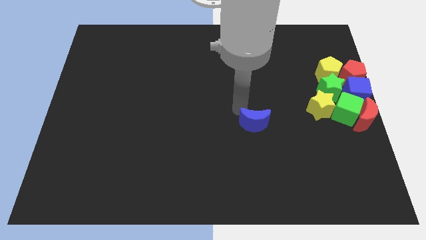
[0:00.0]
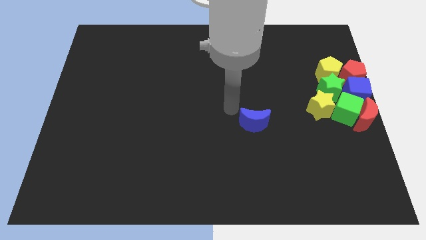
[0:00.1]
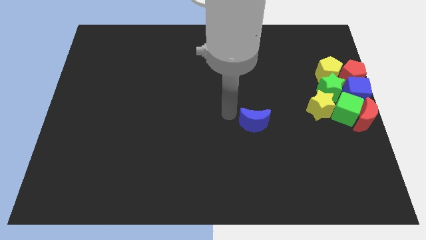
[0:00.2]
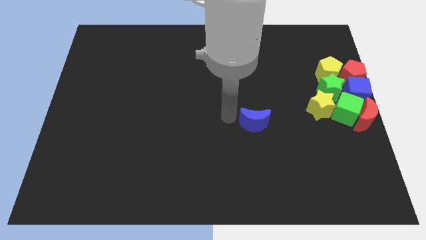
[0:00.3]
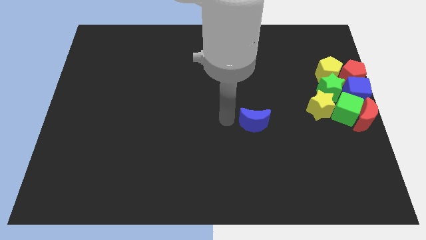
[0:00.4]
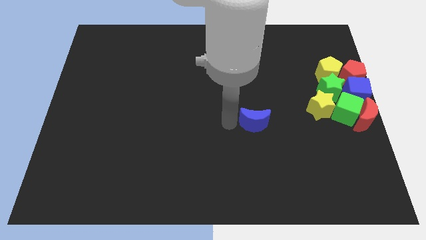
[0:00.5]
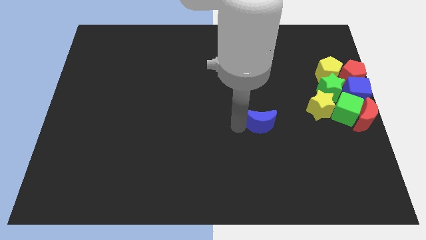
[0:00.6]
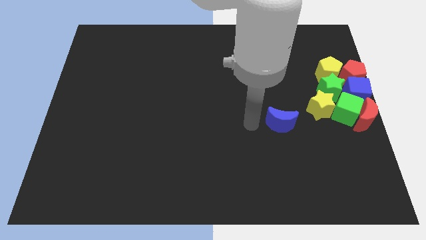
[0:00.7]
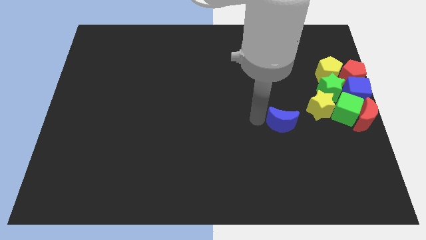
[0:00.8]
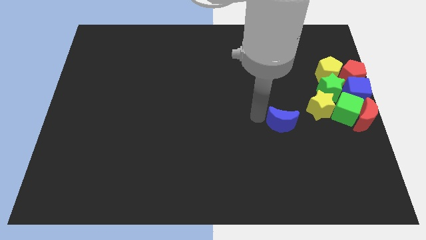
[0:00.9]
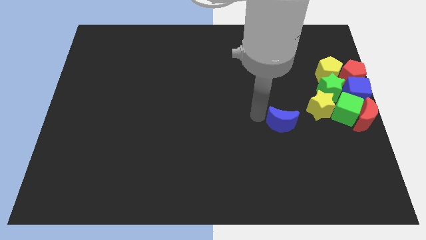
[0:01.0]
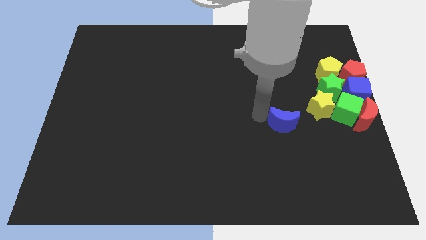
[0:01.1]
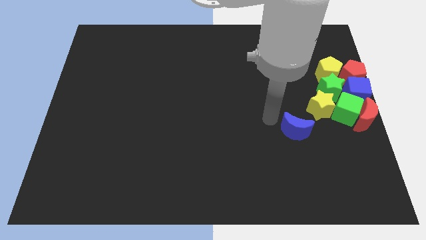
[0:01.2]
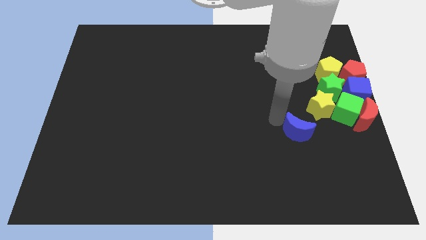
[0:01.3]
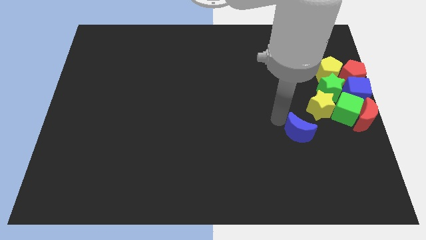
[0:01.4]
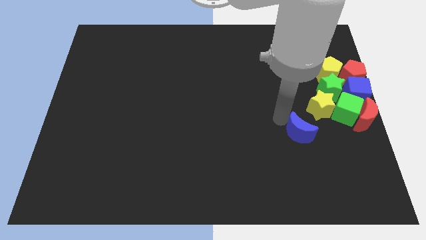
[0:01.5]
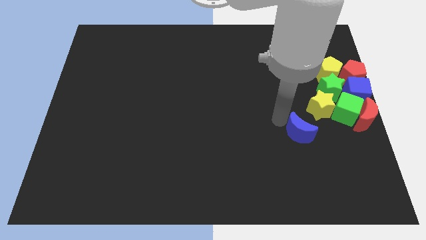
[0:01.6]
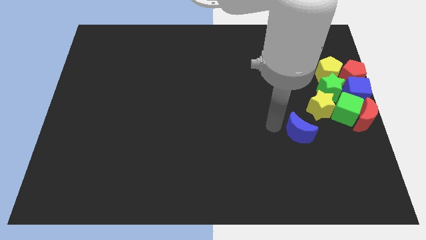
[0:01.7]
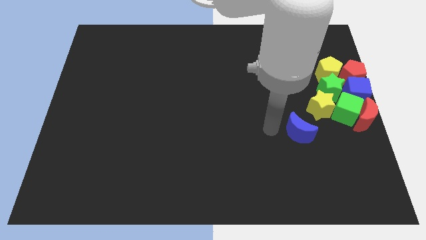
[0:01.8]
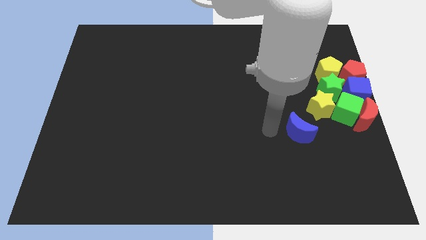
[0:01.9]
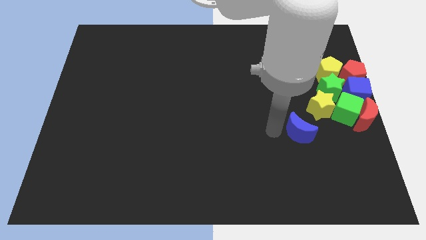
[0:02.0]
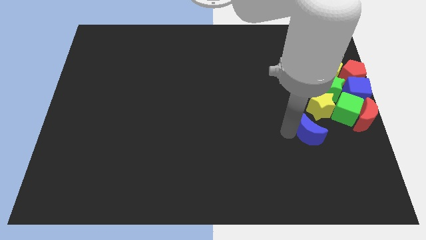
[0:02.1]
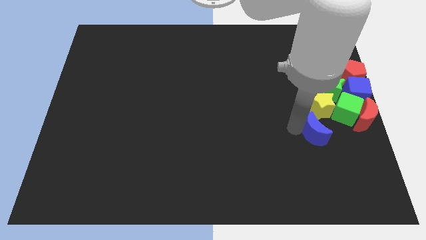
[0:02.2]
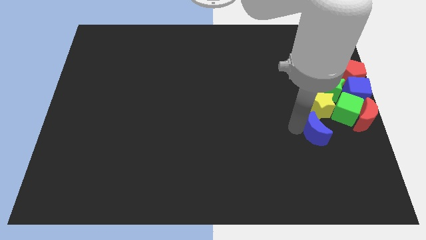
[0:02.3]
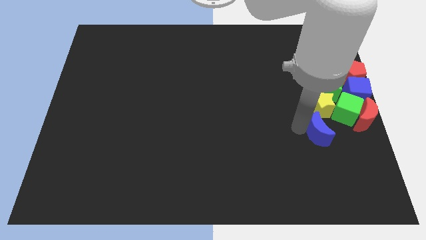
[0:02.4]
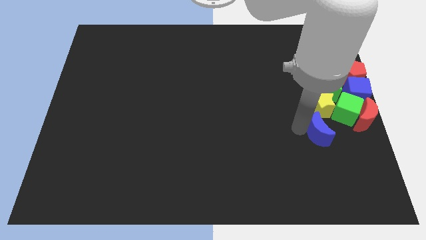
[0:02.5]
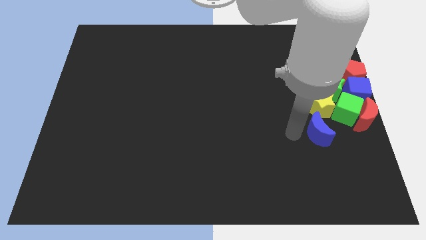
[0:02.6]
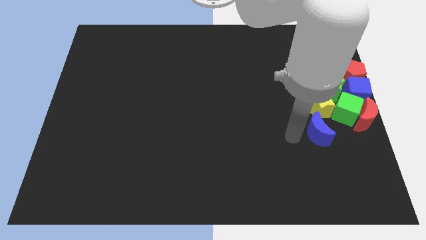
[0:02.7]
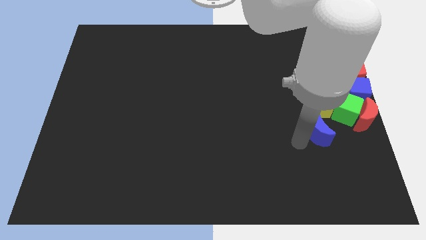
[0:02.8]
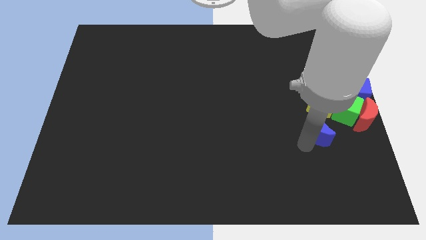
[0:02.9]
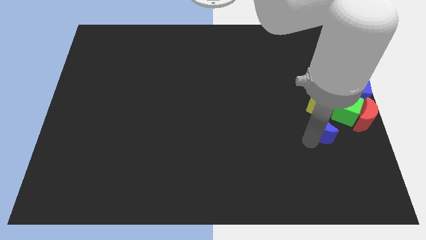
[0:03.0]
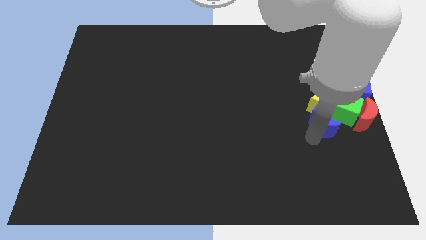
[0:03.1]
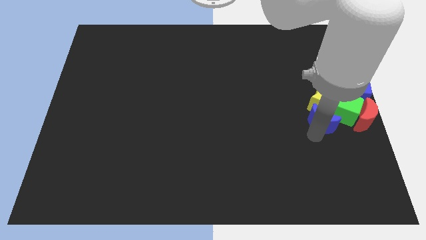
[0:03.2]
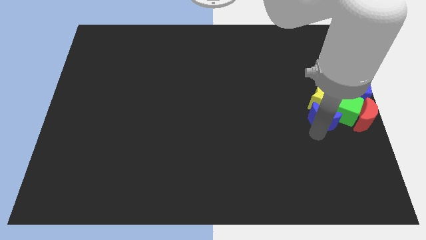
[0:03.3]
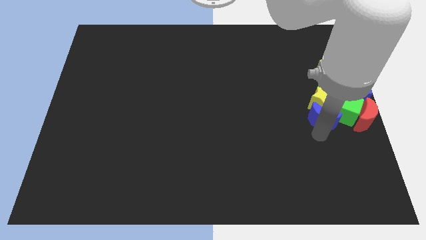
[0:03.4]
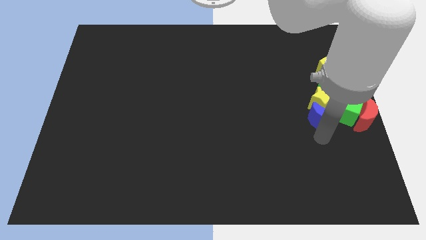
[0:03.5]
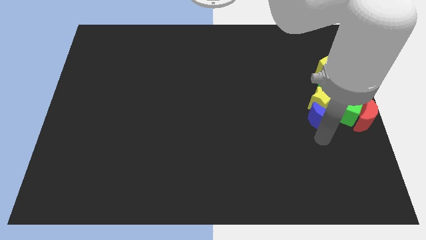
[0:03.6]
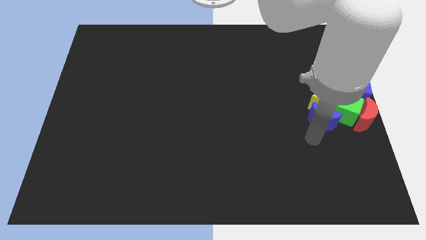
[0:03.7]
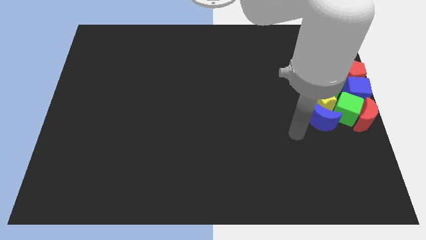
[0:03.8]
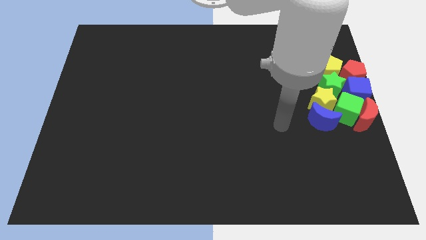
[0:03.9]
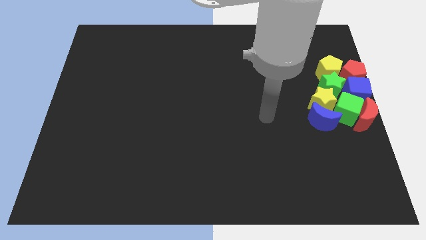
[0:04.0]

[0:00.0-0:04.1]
place the blue crescent to the bottom of the yellow star

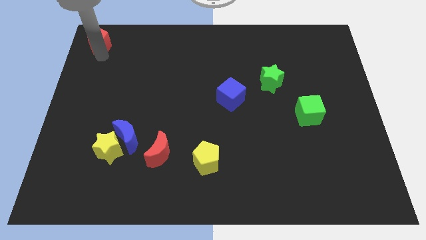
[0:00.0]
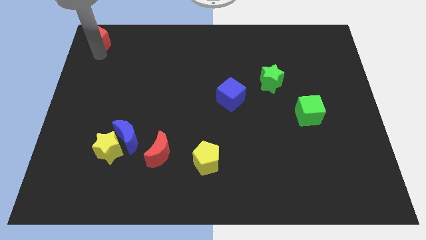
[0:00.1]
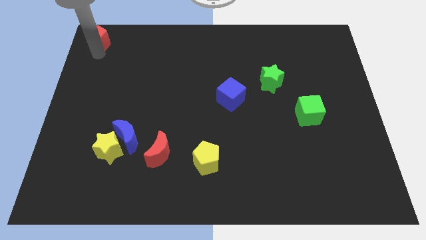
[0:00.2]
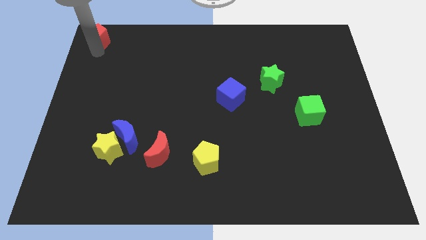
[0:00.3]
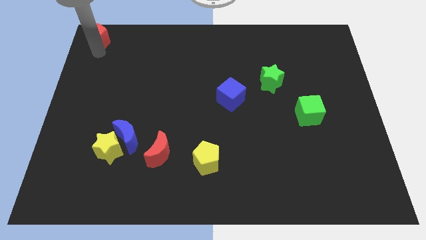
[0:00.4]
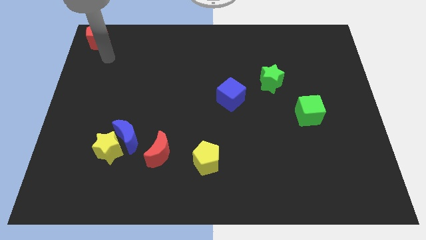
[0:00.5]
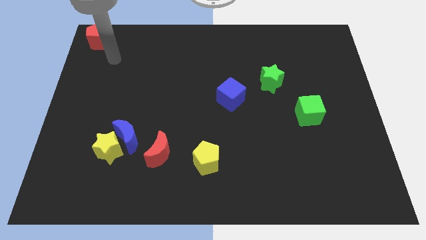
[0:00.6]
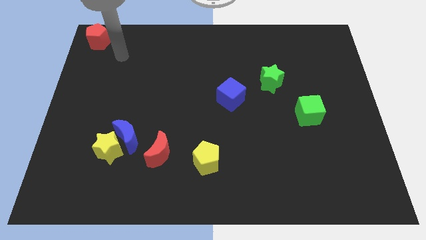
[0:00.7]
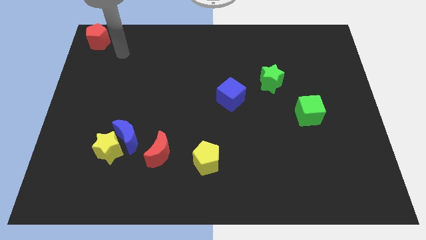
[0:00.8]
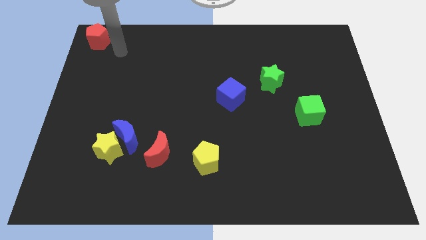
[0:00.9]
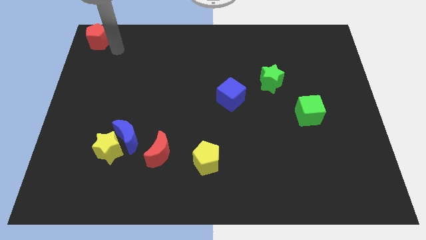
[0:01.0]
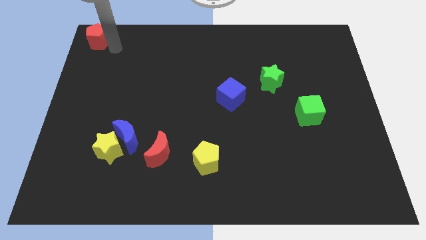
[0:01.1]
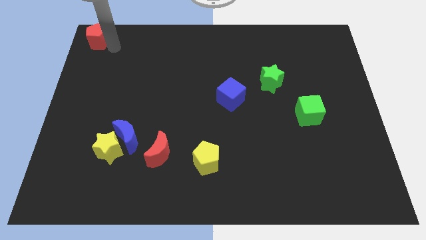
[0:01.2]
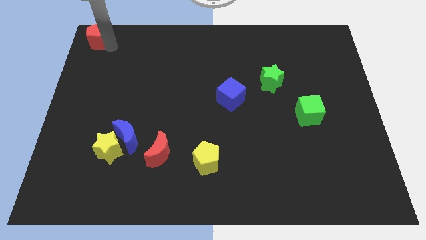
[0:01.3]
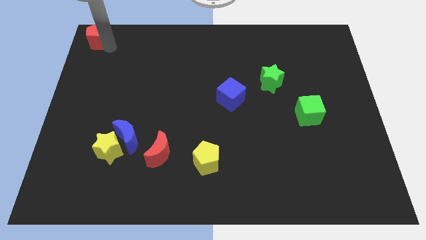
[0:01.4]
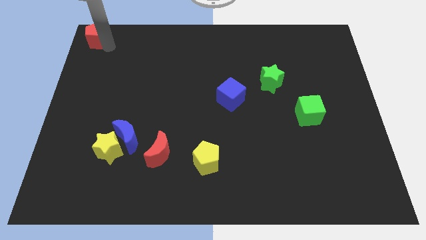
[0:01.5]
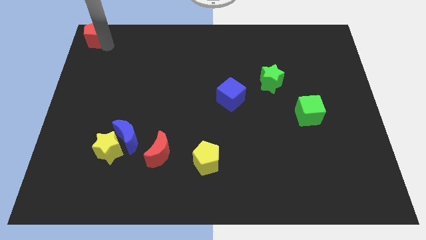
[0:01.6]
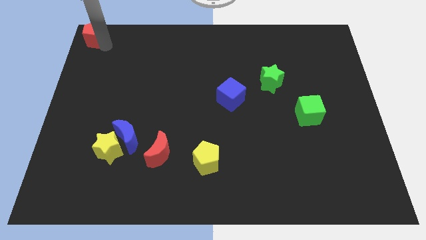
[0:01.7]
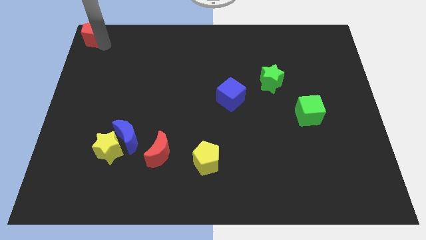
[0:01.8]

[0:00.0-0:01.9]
move the red pentagon to the top left corner

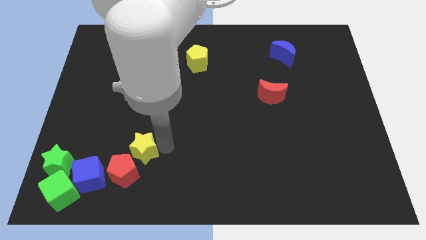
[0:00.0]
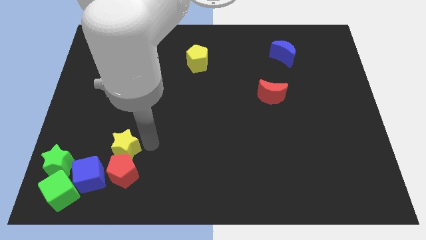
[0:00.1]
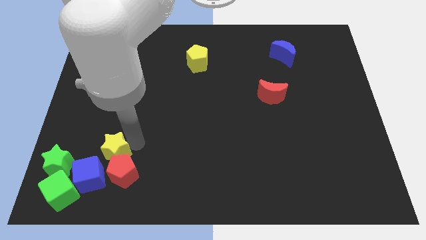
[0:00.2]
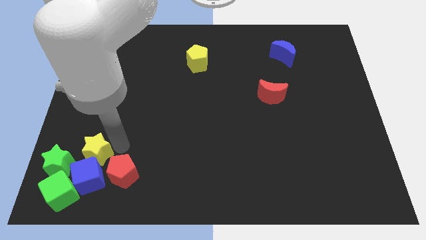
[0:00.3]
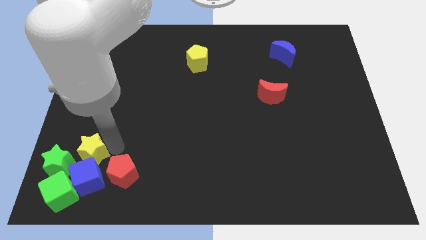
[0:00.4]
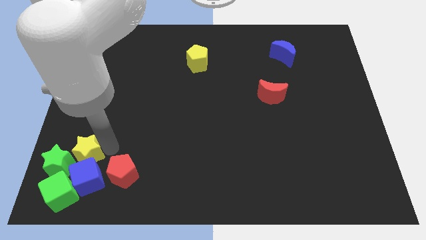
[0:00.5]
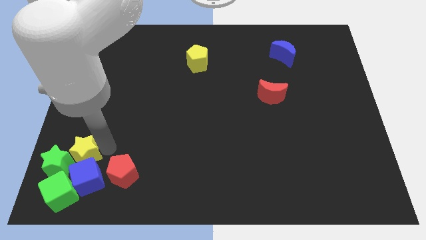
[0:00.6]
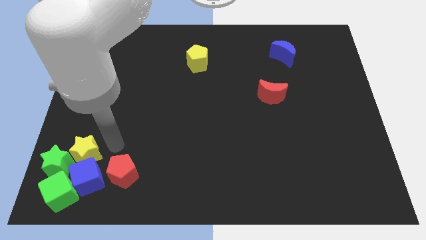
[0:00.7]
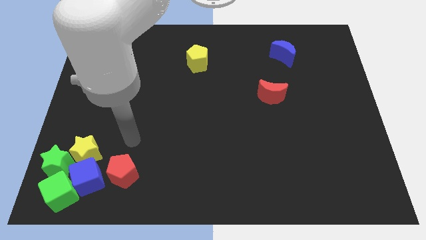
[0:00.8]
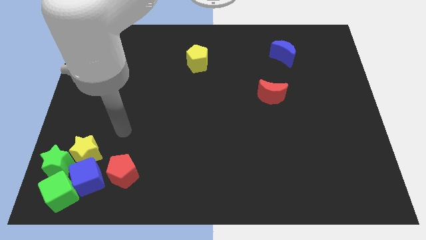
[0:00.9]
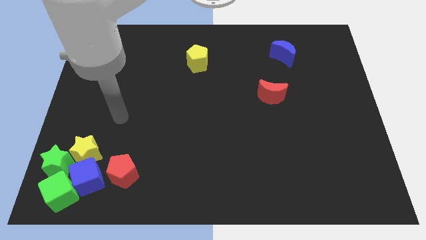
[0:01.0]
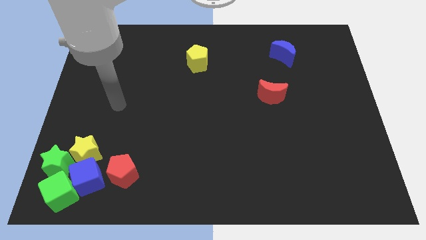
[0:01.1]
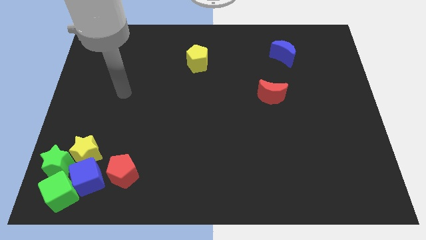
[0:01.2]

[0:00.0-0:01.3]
move the yellow star into the green star

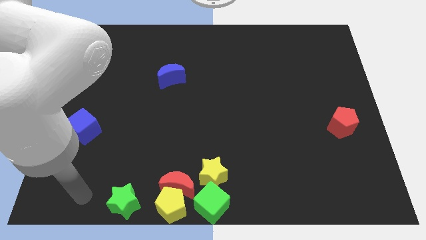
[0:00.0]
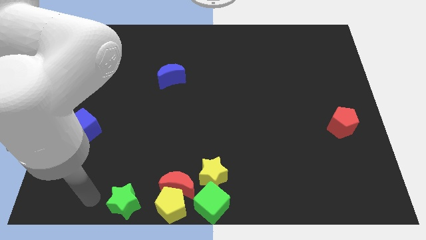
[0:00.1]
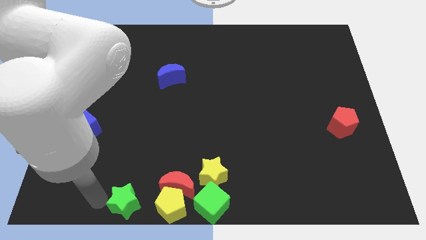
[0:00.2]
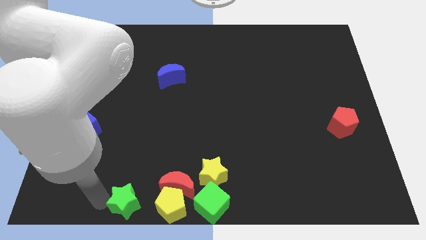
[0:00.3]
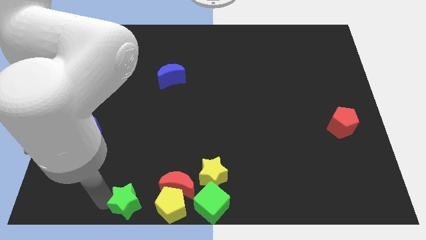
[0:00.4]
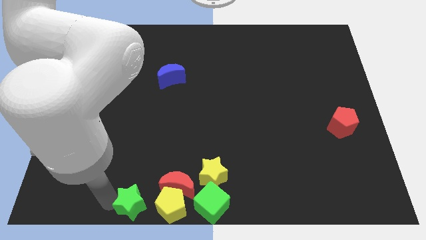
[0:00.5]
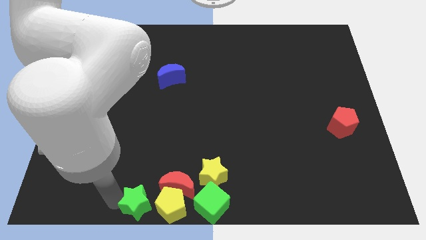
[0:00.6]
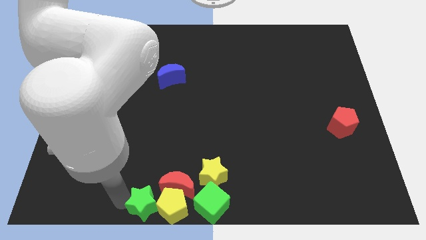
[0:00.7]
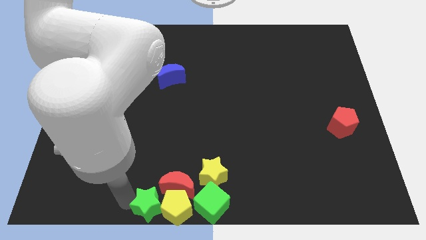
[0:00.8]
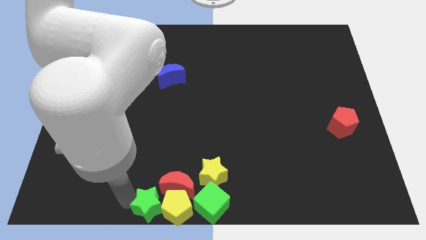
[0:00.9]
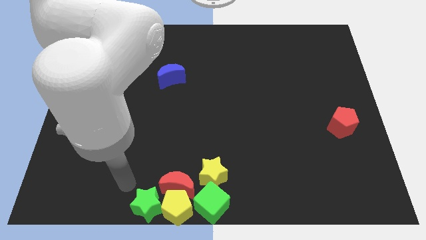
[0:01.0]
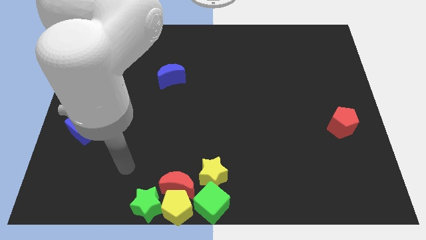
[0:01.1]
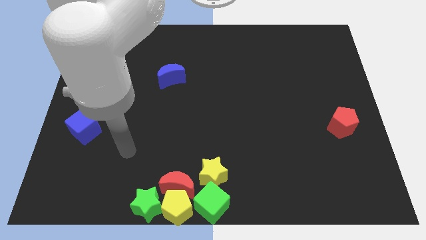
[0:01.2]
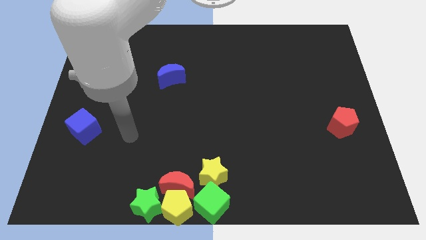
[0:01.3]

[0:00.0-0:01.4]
move the green star to the left side of the yellow pentagon

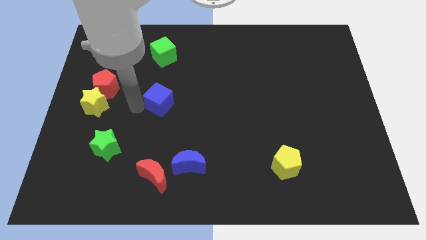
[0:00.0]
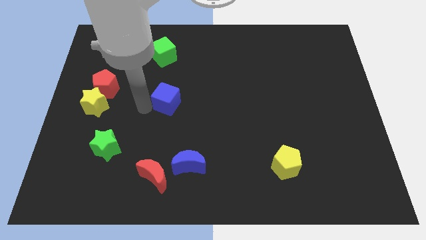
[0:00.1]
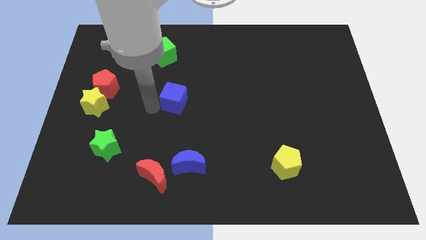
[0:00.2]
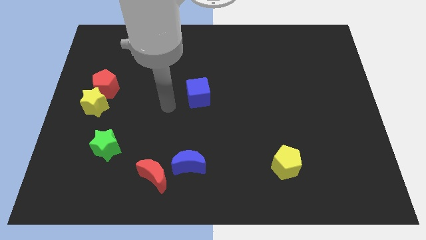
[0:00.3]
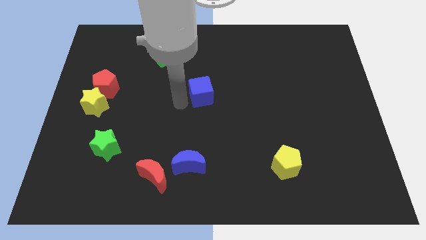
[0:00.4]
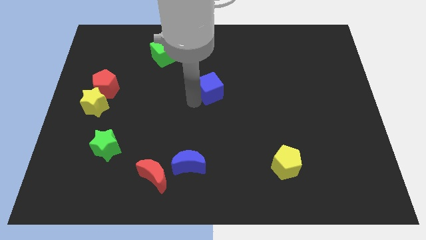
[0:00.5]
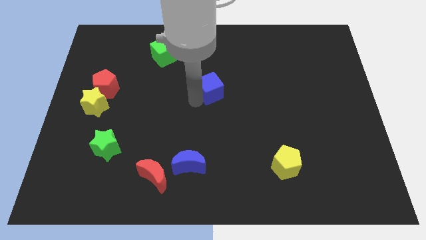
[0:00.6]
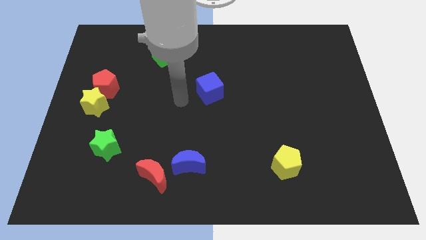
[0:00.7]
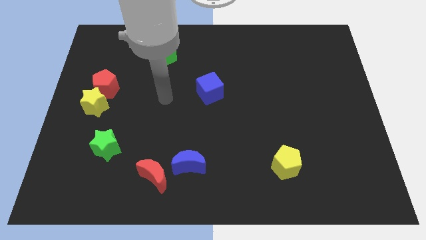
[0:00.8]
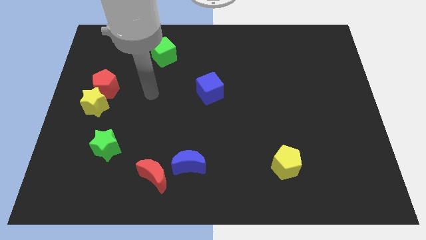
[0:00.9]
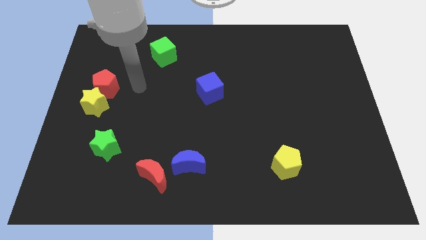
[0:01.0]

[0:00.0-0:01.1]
push the blue cube to the right side of the board
